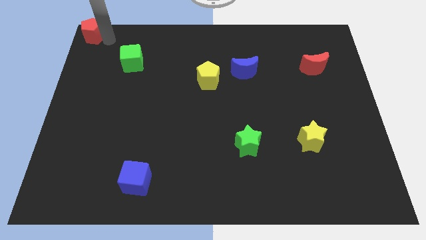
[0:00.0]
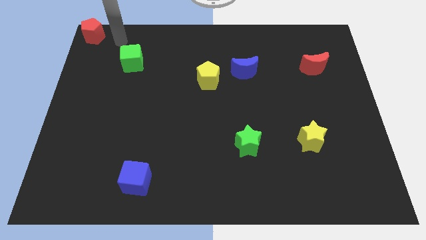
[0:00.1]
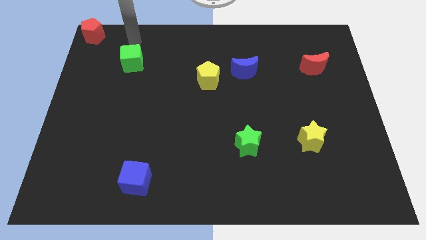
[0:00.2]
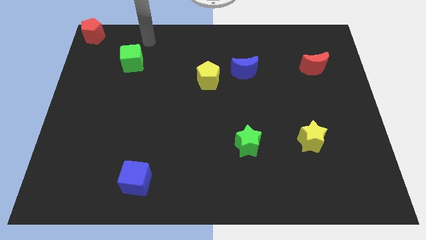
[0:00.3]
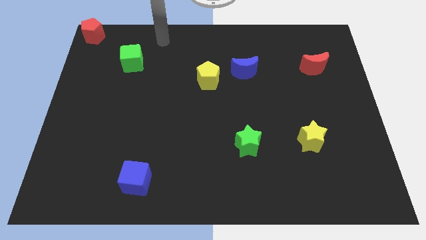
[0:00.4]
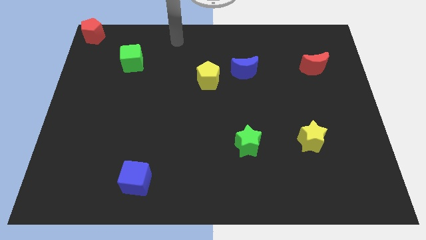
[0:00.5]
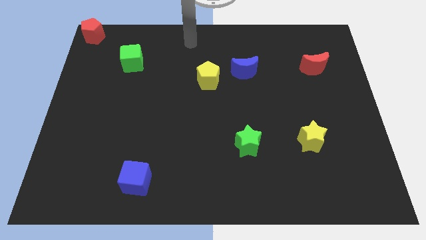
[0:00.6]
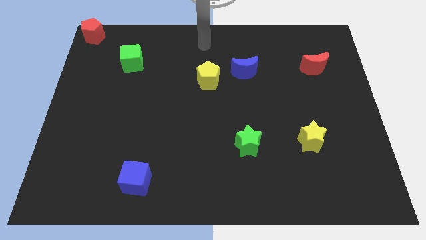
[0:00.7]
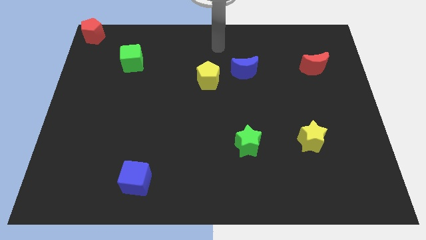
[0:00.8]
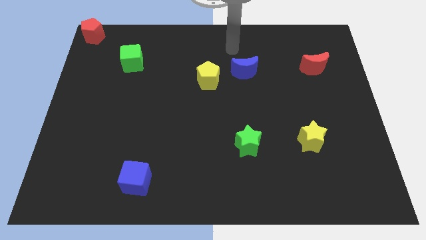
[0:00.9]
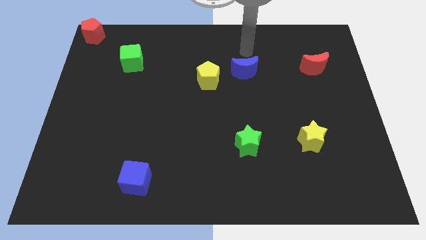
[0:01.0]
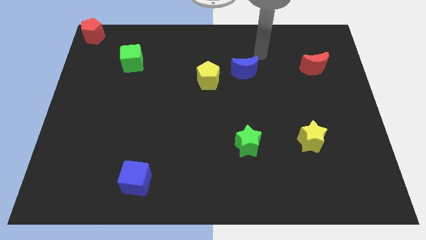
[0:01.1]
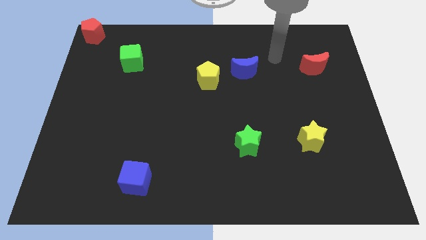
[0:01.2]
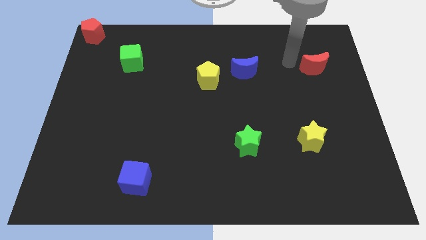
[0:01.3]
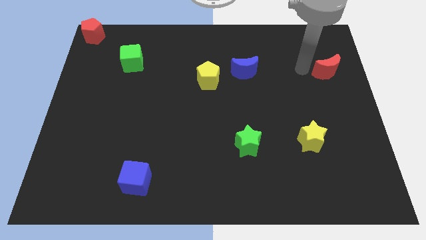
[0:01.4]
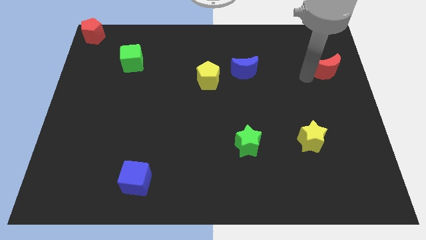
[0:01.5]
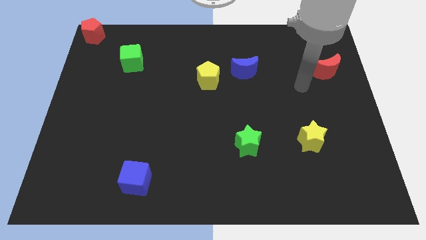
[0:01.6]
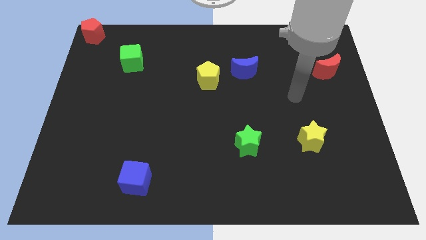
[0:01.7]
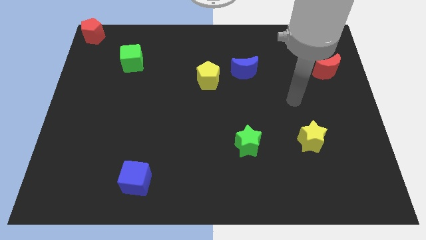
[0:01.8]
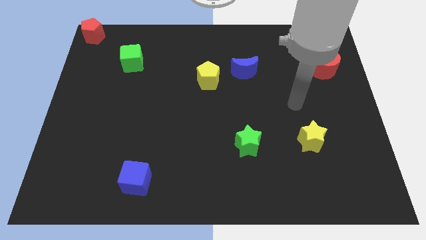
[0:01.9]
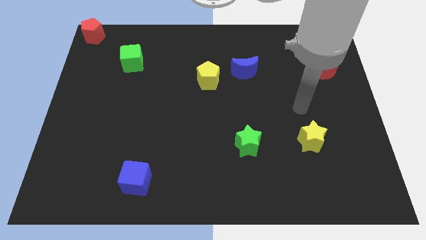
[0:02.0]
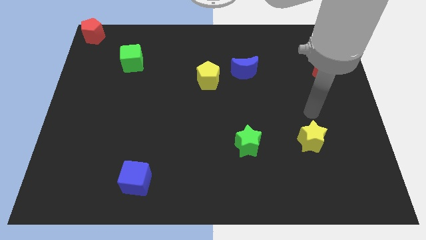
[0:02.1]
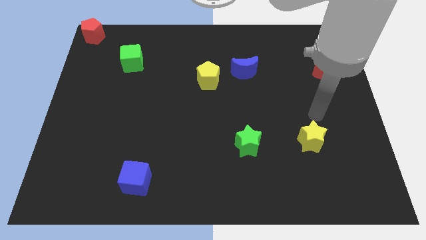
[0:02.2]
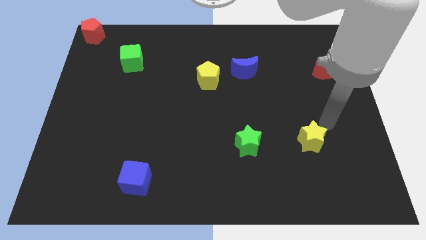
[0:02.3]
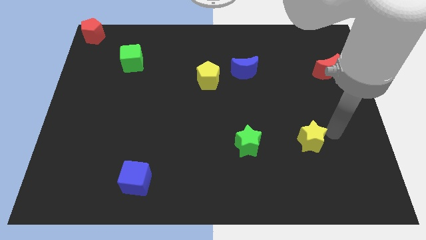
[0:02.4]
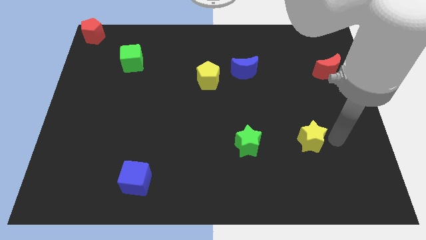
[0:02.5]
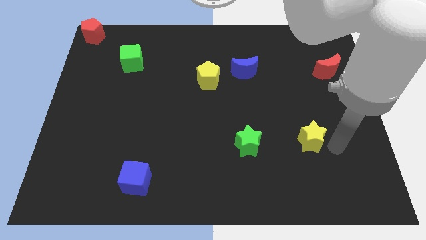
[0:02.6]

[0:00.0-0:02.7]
slightly push the red moon towards the right side of the board

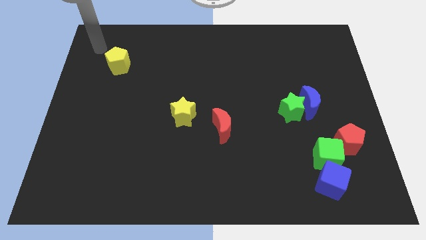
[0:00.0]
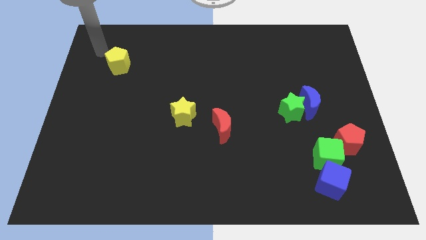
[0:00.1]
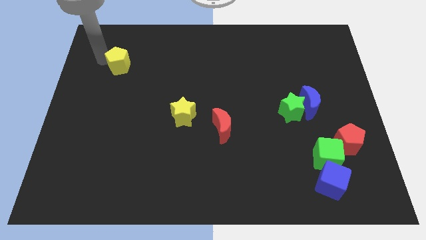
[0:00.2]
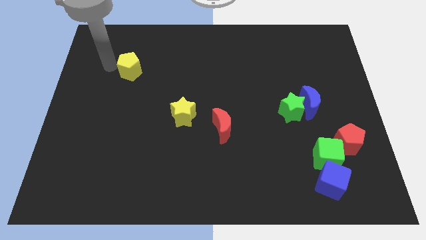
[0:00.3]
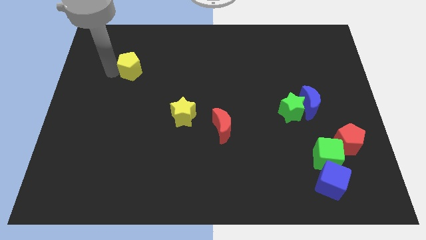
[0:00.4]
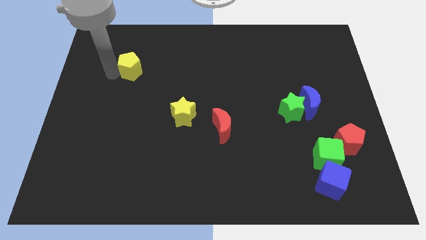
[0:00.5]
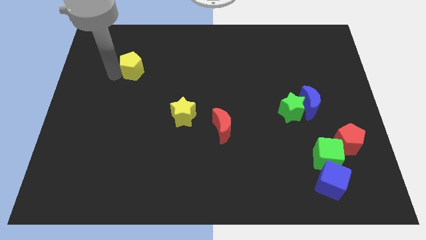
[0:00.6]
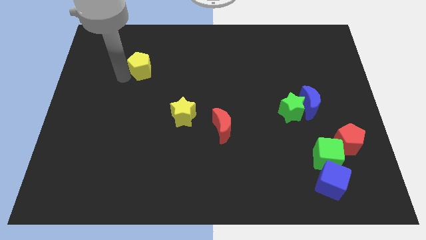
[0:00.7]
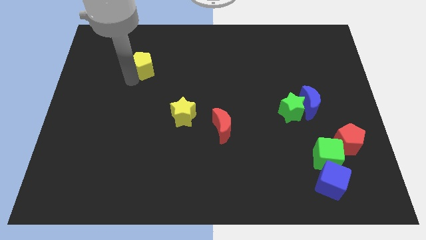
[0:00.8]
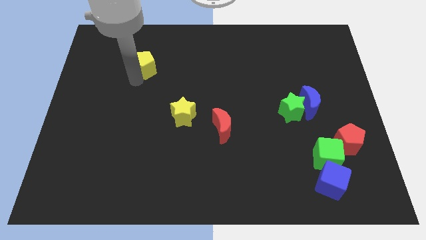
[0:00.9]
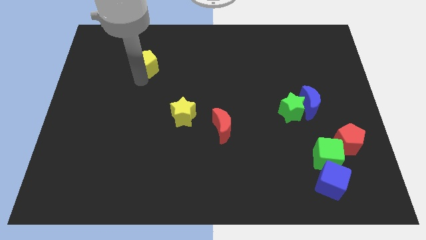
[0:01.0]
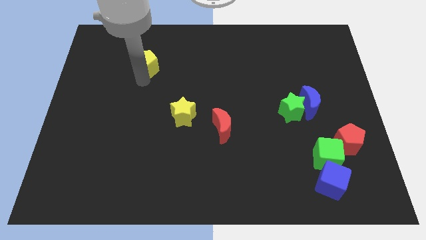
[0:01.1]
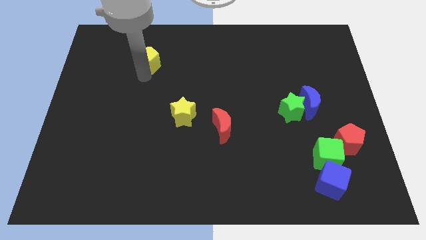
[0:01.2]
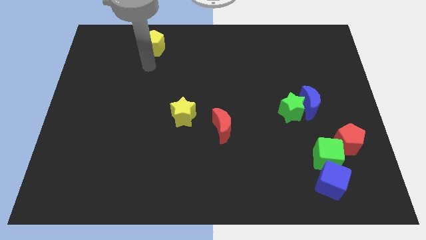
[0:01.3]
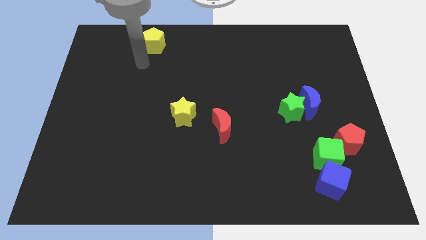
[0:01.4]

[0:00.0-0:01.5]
push the yellow pentagon towards the top of the board

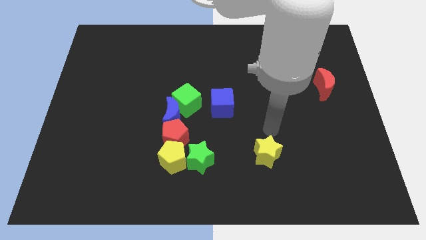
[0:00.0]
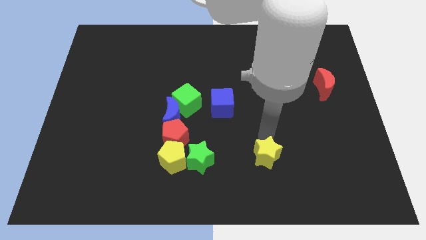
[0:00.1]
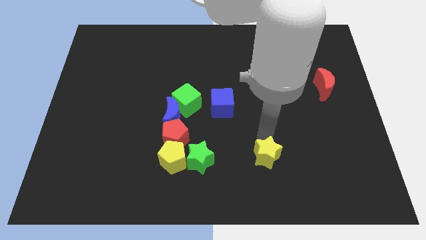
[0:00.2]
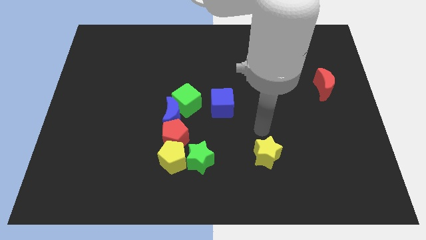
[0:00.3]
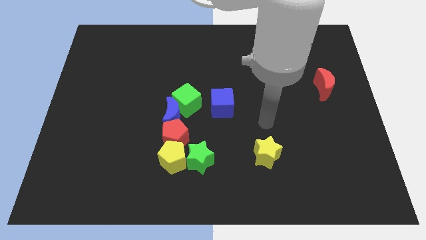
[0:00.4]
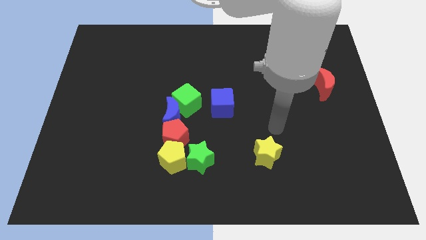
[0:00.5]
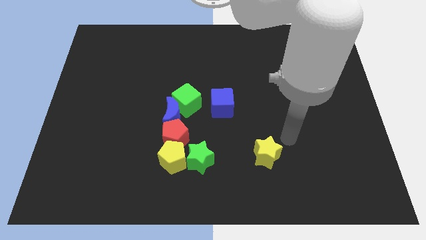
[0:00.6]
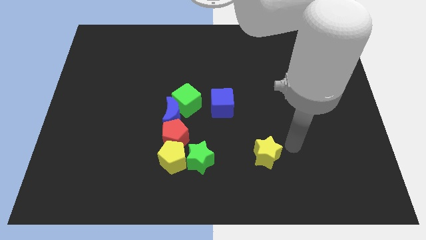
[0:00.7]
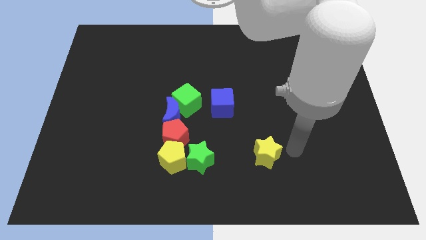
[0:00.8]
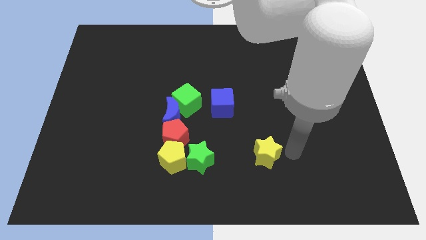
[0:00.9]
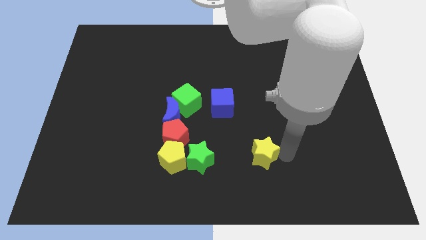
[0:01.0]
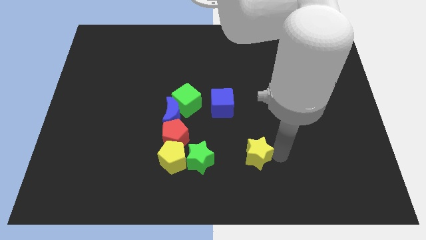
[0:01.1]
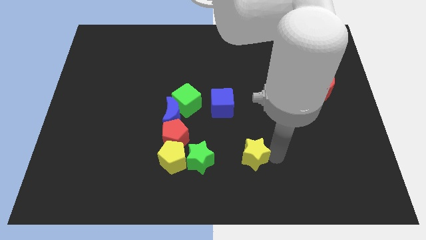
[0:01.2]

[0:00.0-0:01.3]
push yellow star parallel right to green star

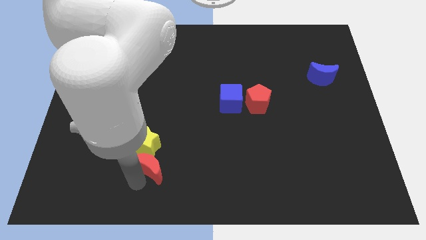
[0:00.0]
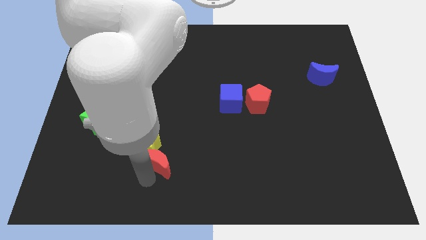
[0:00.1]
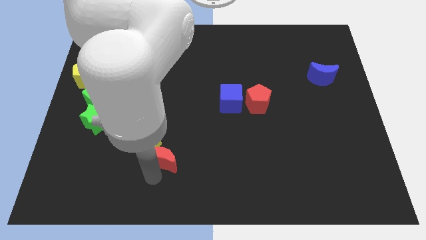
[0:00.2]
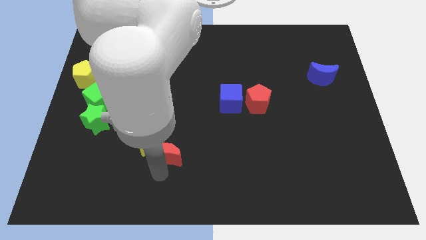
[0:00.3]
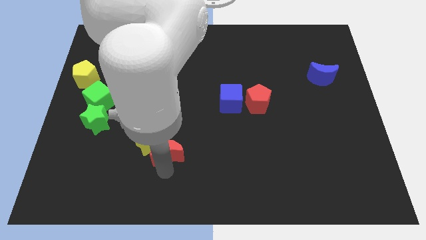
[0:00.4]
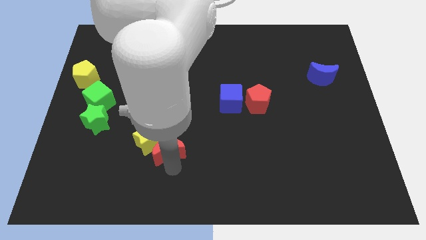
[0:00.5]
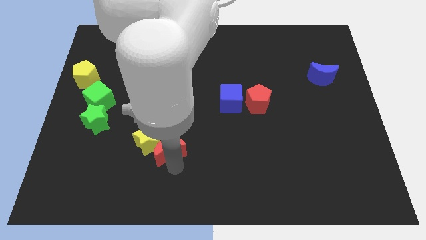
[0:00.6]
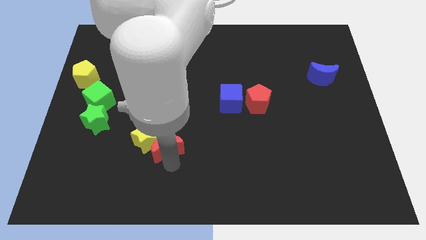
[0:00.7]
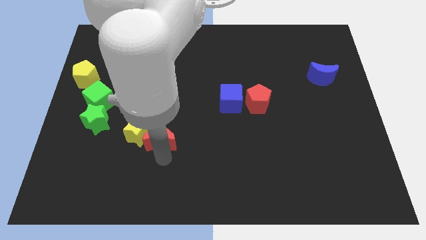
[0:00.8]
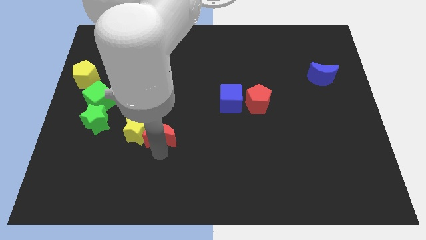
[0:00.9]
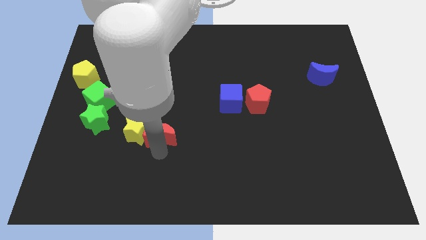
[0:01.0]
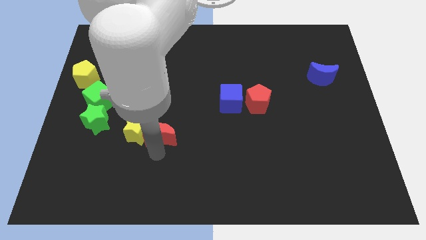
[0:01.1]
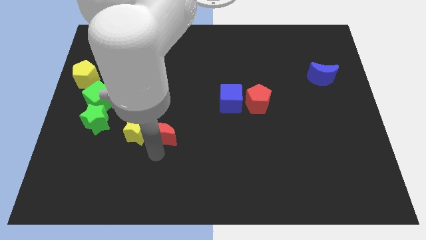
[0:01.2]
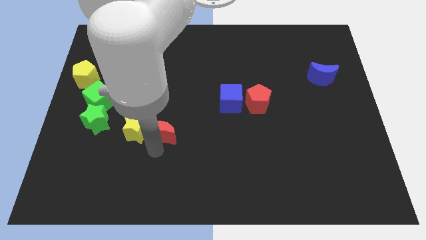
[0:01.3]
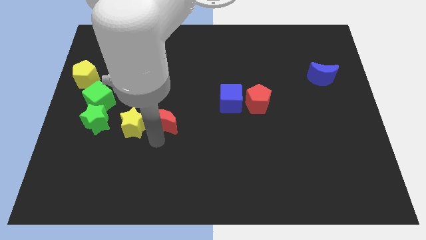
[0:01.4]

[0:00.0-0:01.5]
push the red crescent to the right of the yellow star

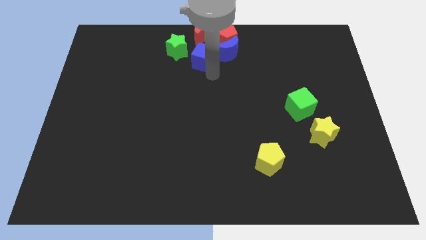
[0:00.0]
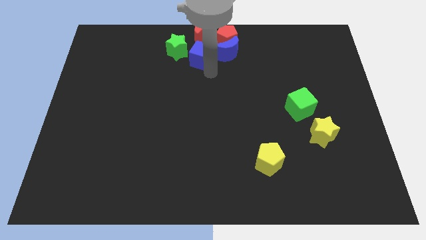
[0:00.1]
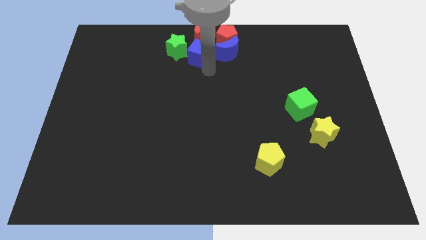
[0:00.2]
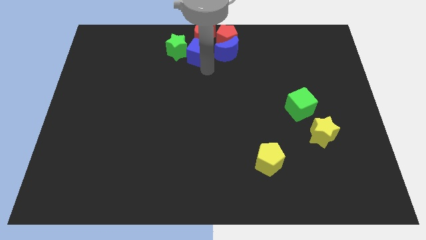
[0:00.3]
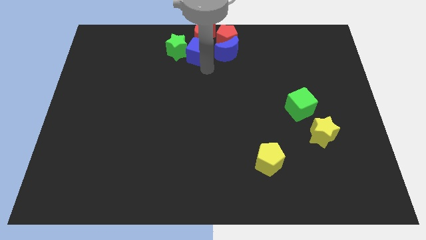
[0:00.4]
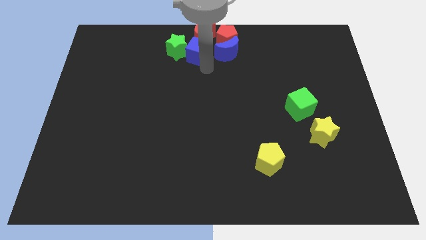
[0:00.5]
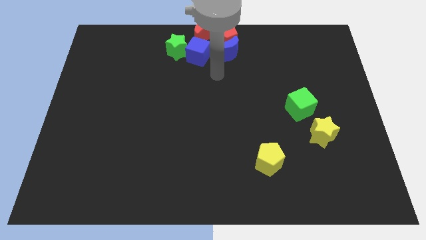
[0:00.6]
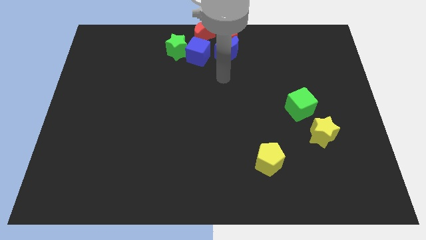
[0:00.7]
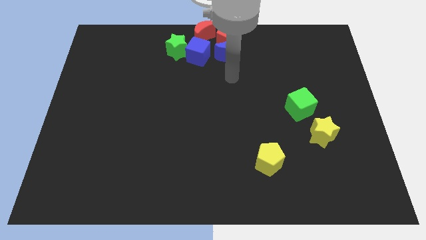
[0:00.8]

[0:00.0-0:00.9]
place blue cube to the right of green star

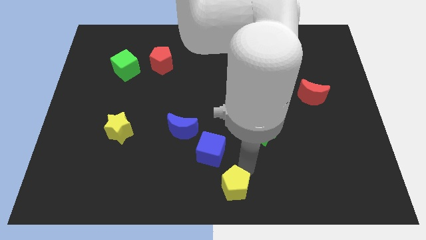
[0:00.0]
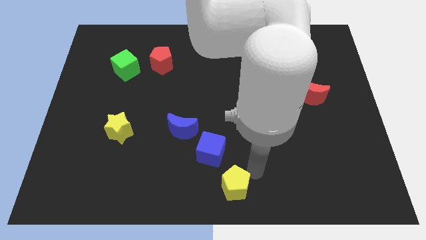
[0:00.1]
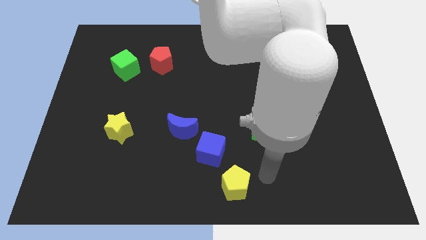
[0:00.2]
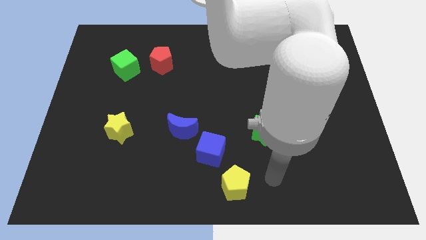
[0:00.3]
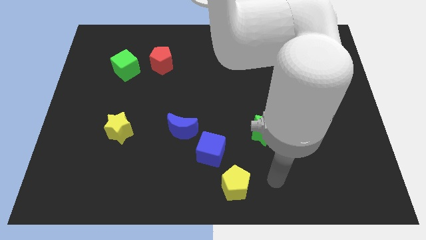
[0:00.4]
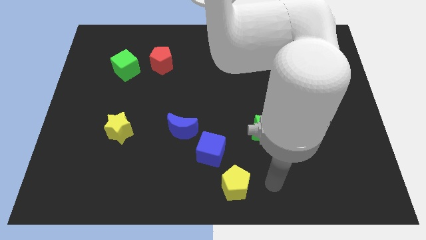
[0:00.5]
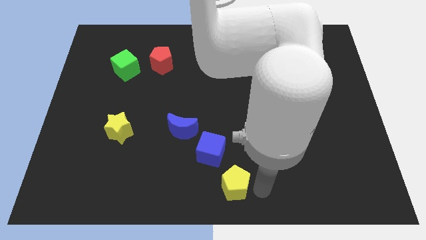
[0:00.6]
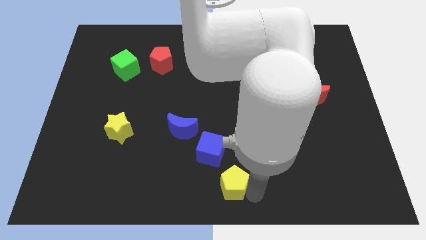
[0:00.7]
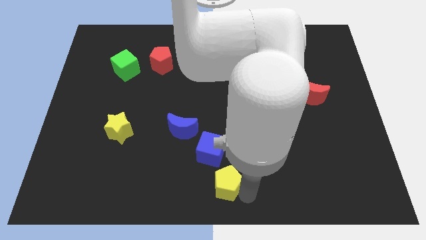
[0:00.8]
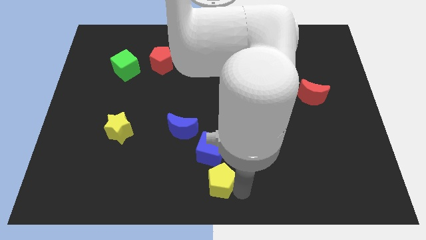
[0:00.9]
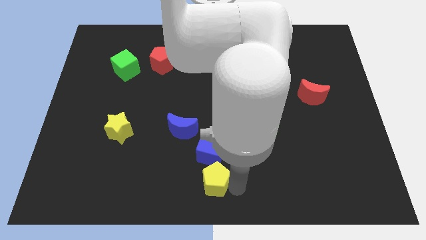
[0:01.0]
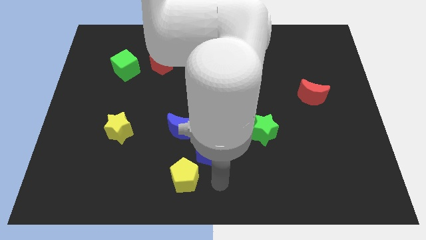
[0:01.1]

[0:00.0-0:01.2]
move the yellow pentagon to the bottom of the blue cube
